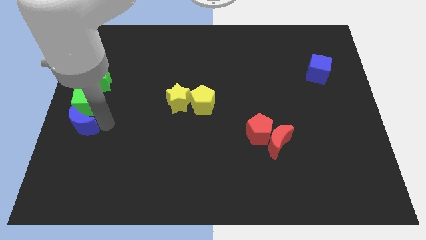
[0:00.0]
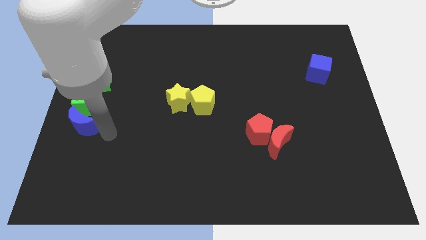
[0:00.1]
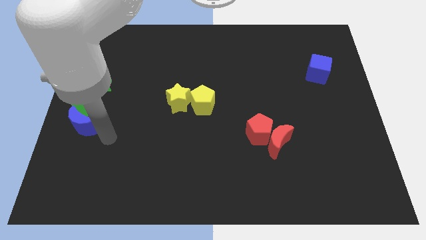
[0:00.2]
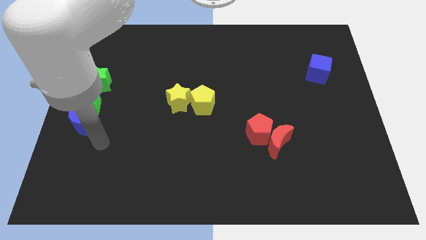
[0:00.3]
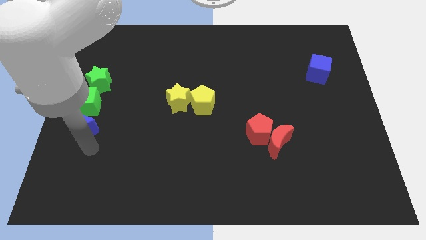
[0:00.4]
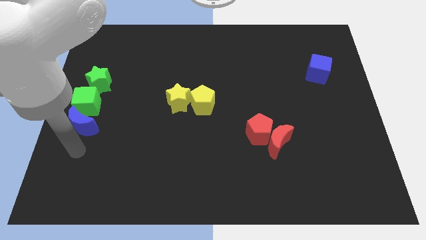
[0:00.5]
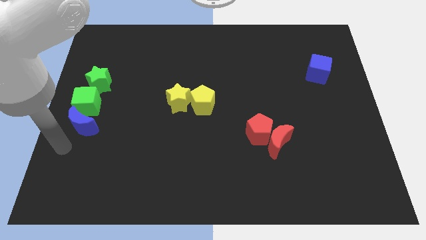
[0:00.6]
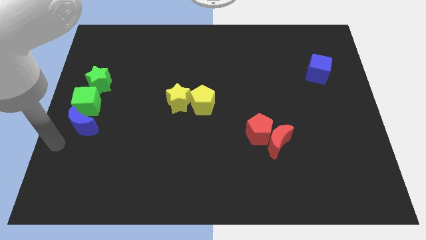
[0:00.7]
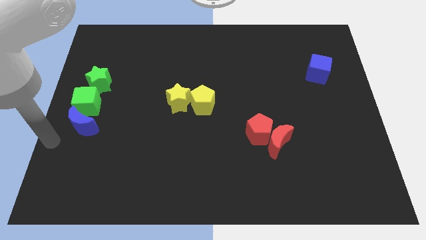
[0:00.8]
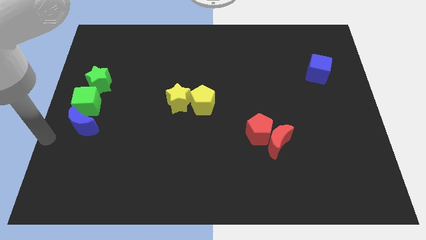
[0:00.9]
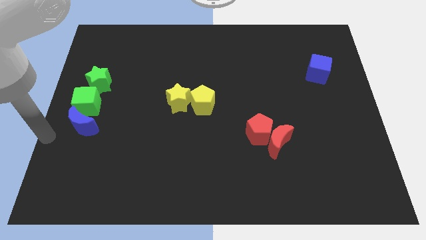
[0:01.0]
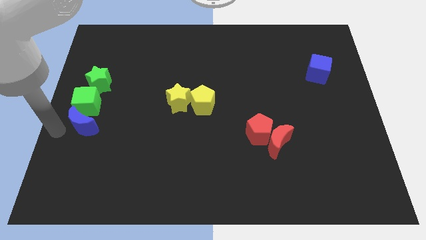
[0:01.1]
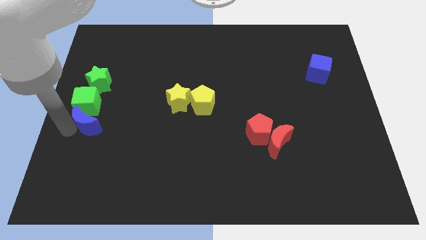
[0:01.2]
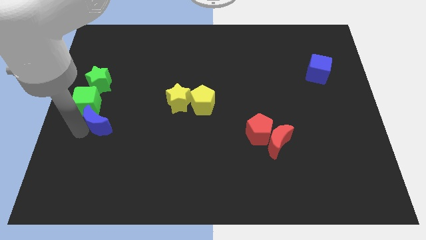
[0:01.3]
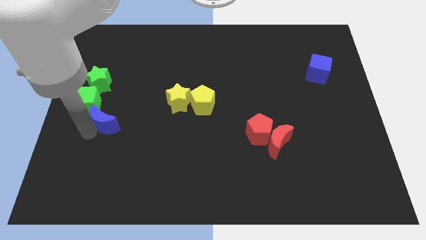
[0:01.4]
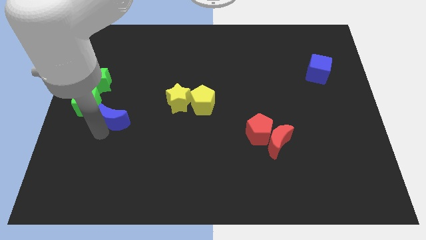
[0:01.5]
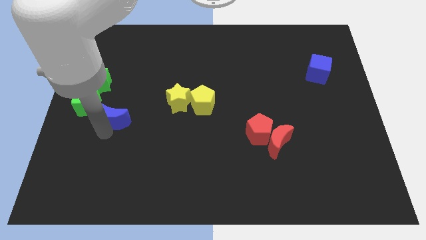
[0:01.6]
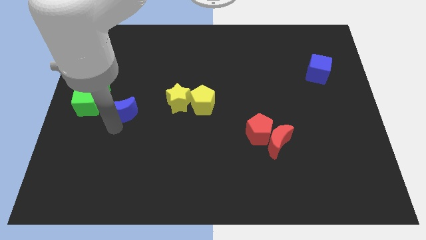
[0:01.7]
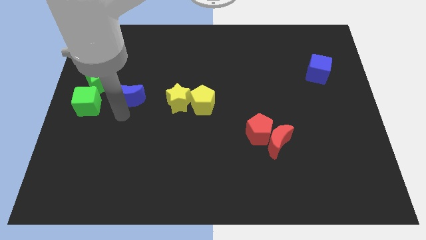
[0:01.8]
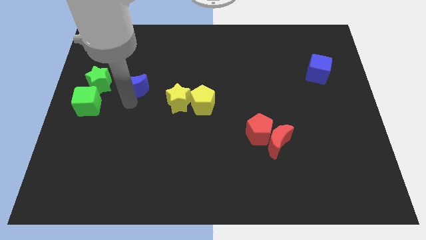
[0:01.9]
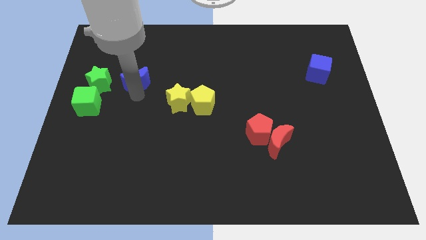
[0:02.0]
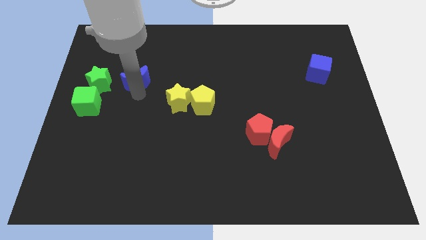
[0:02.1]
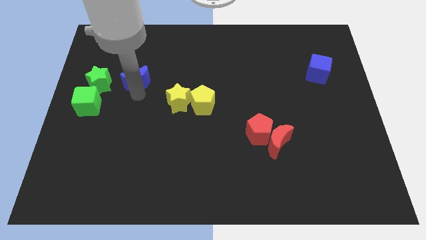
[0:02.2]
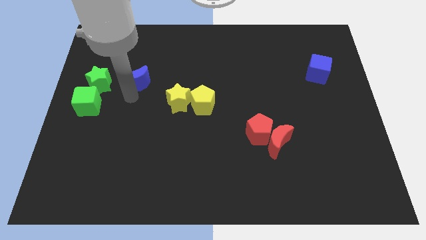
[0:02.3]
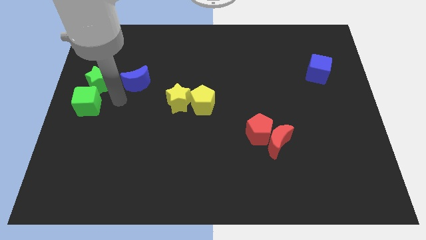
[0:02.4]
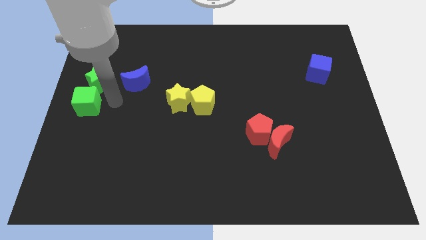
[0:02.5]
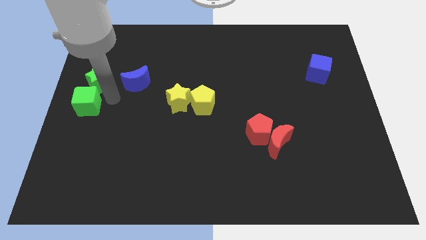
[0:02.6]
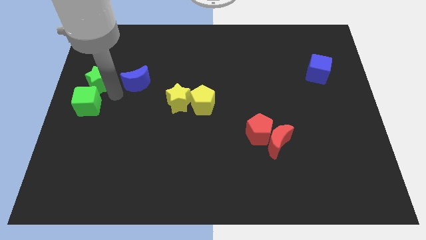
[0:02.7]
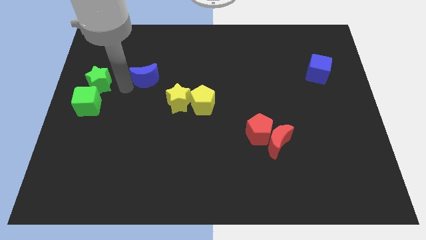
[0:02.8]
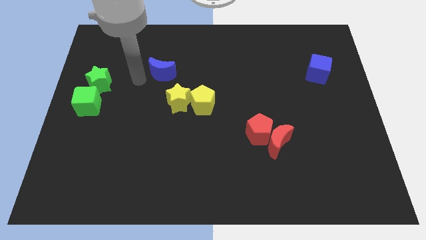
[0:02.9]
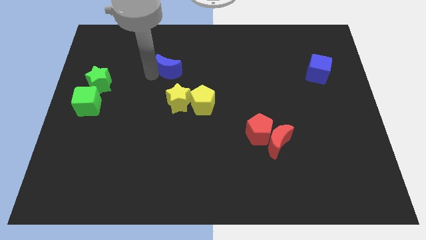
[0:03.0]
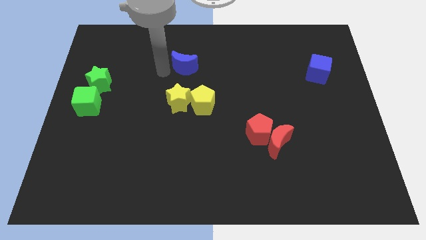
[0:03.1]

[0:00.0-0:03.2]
move the blue moon above the yellow star

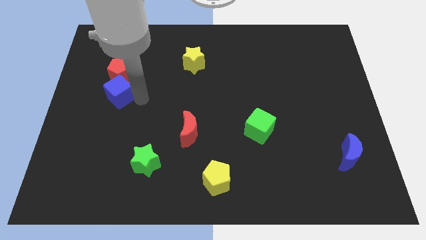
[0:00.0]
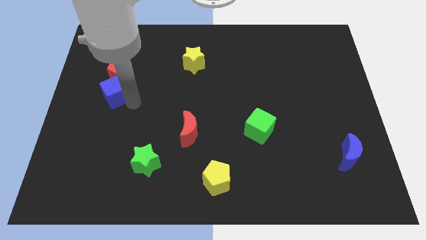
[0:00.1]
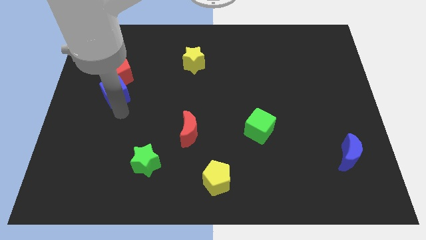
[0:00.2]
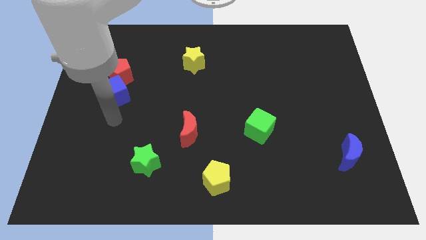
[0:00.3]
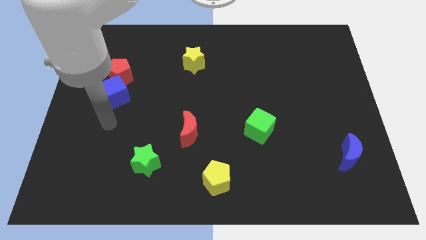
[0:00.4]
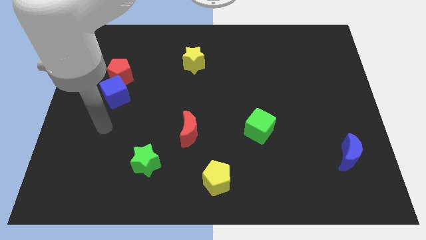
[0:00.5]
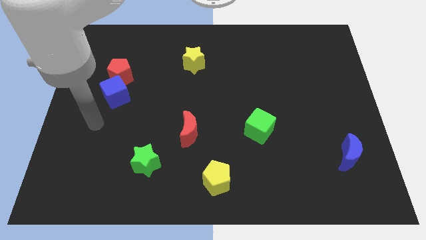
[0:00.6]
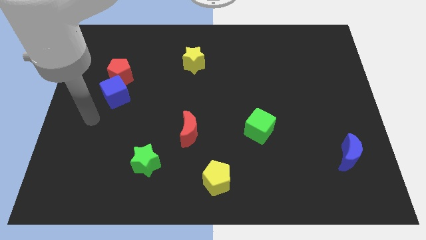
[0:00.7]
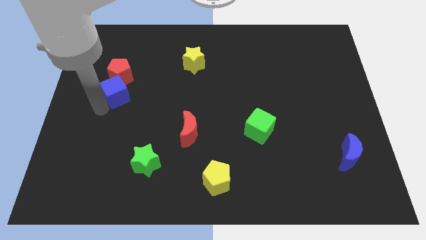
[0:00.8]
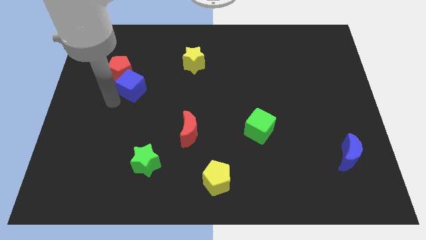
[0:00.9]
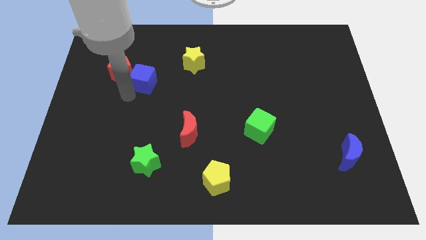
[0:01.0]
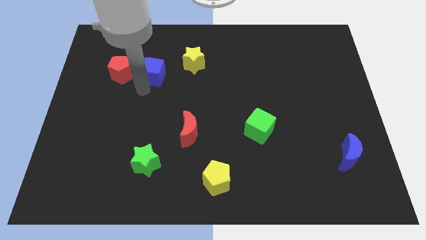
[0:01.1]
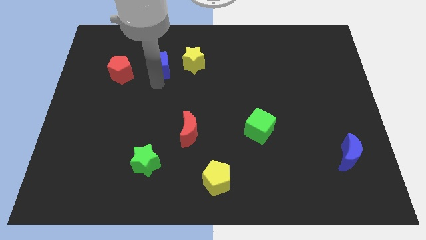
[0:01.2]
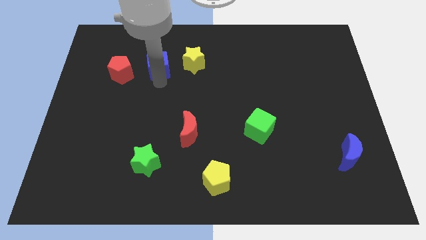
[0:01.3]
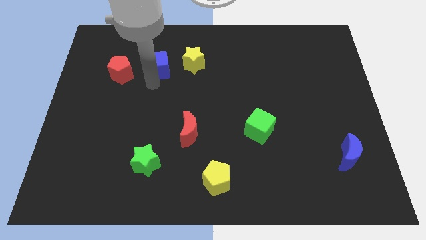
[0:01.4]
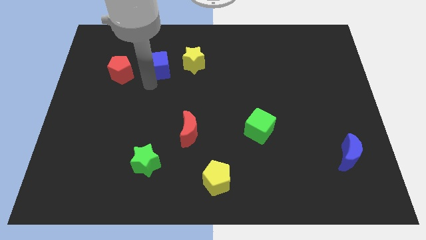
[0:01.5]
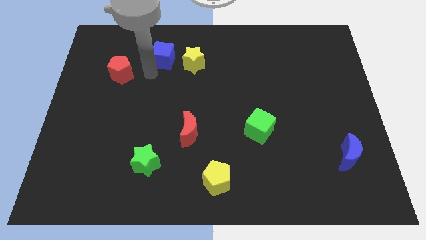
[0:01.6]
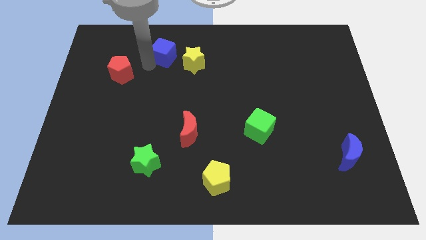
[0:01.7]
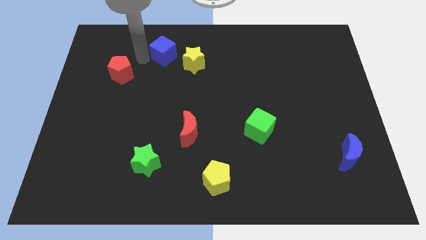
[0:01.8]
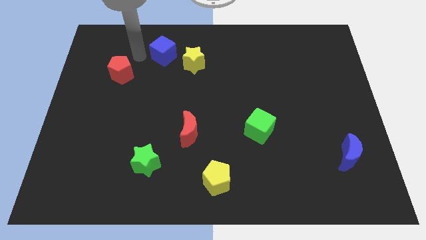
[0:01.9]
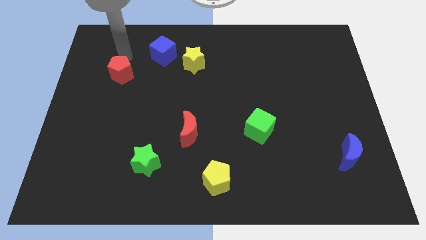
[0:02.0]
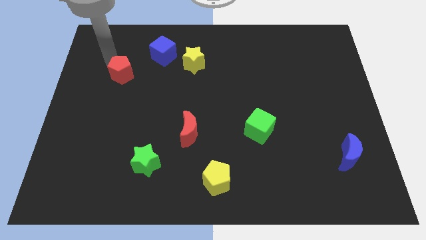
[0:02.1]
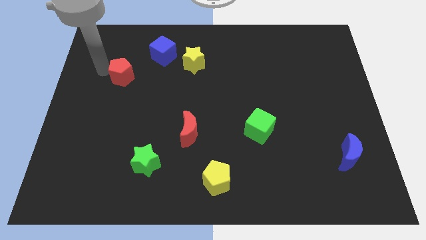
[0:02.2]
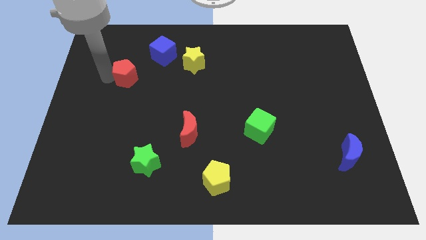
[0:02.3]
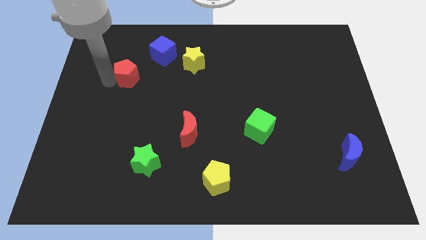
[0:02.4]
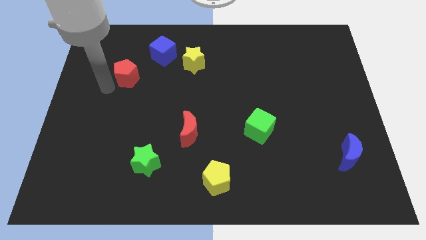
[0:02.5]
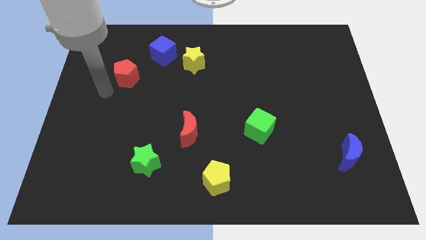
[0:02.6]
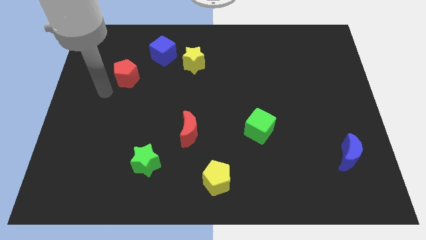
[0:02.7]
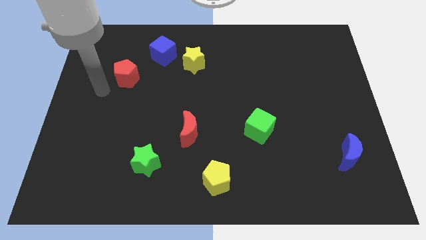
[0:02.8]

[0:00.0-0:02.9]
place the blue cube to right side of the red pentagon

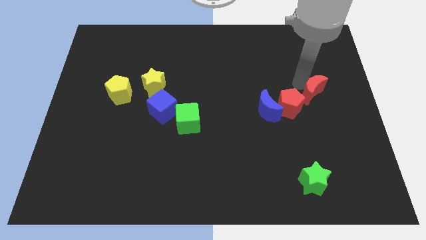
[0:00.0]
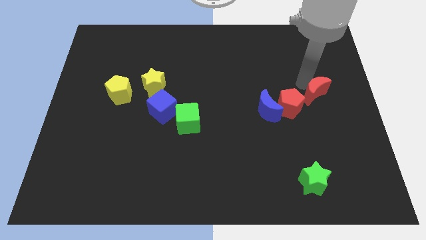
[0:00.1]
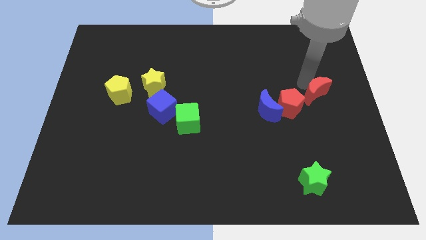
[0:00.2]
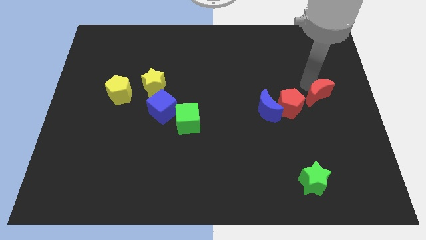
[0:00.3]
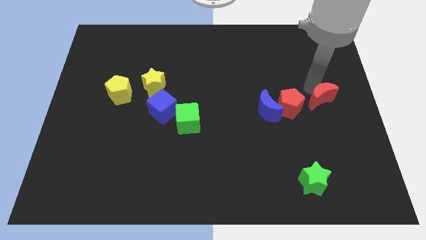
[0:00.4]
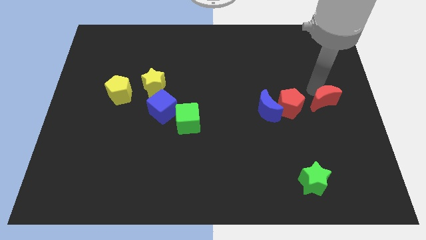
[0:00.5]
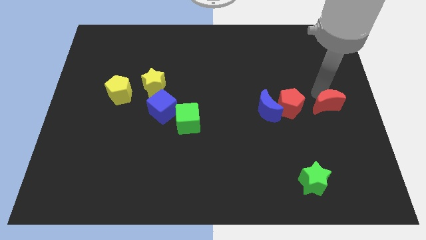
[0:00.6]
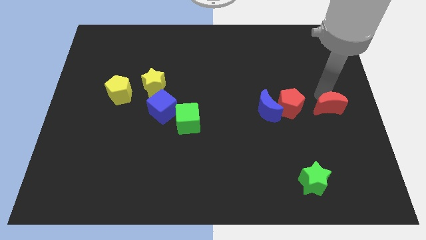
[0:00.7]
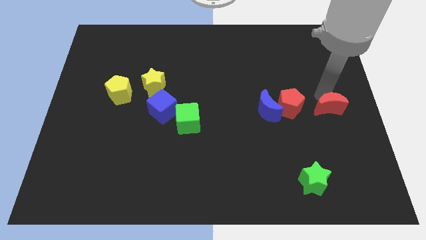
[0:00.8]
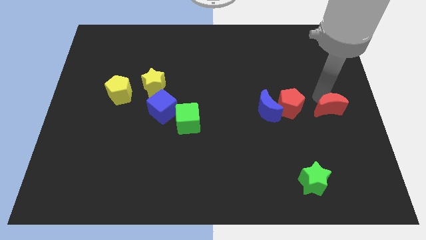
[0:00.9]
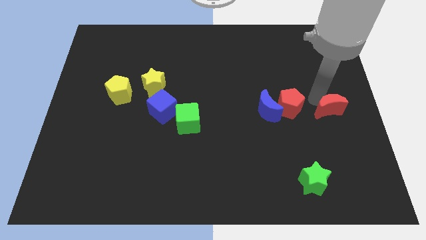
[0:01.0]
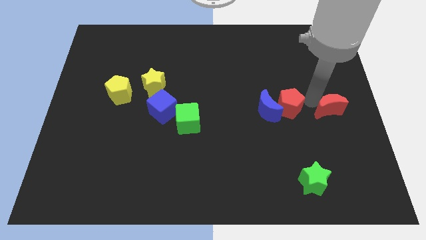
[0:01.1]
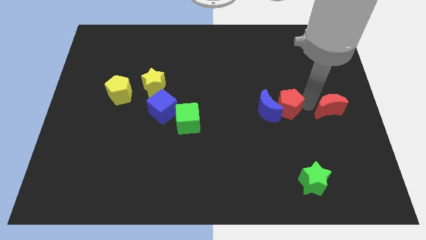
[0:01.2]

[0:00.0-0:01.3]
separate red moon from red pentagon

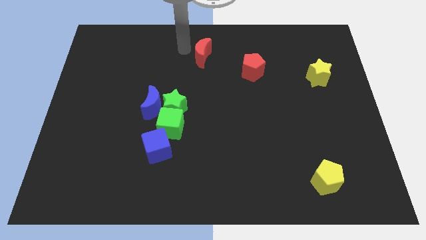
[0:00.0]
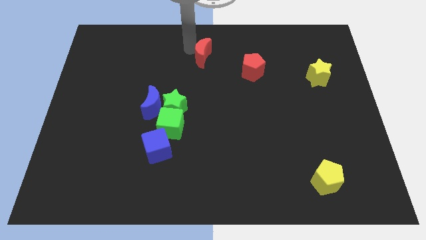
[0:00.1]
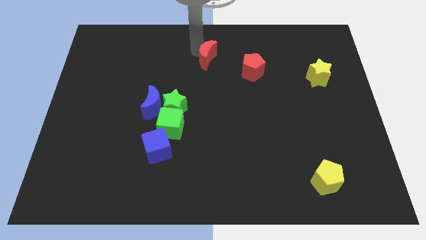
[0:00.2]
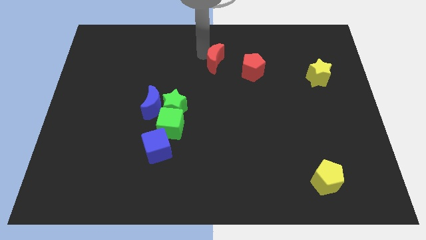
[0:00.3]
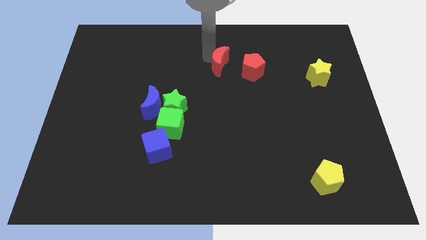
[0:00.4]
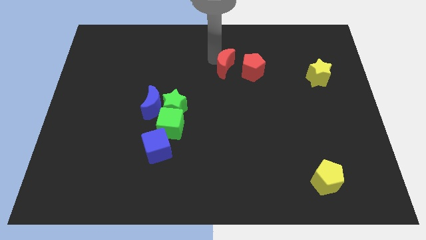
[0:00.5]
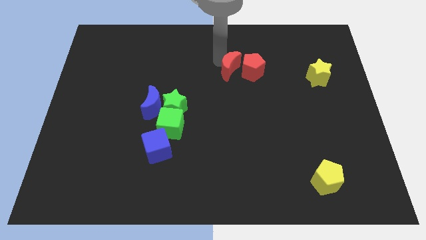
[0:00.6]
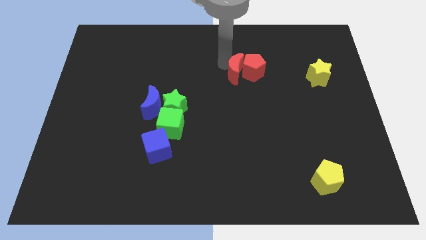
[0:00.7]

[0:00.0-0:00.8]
push the red moon to the left of red pentagon

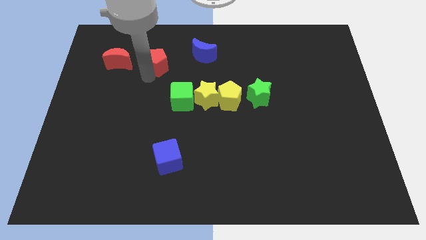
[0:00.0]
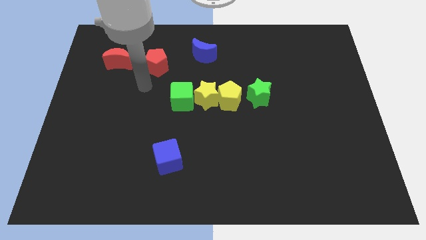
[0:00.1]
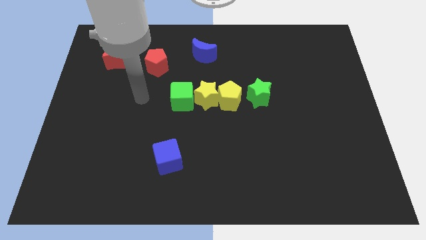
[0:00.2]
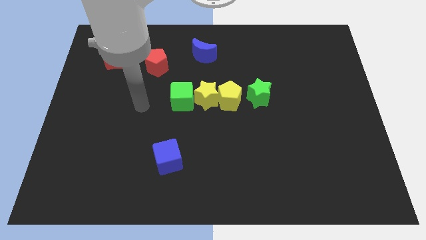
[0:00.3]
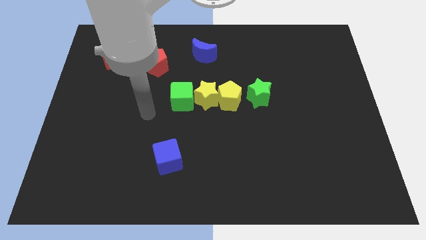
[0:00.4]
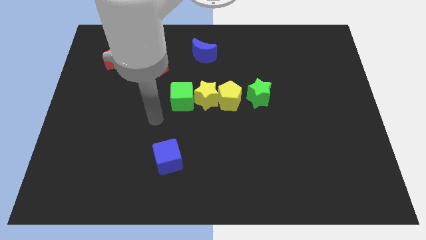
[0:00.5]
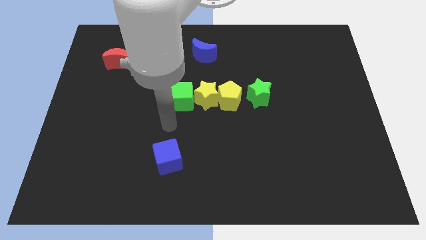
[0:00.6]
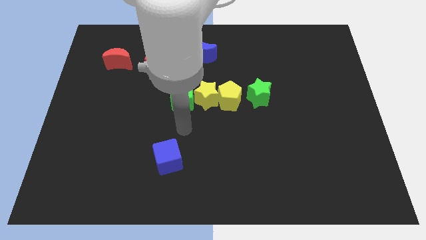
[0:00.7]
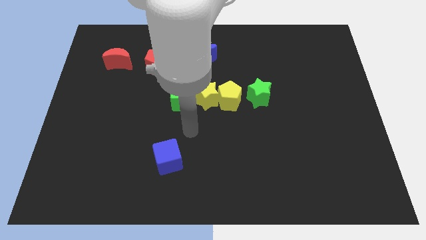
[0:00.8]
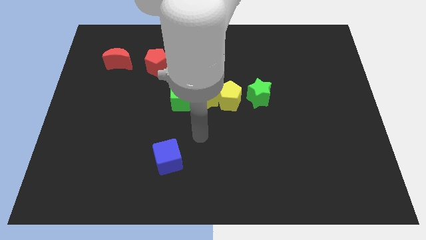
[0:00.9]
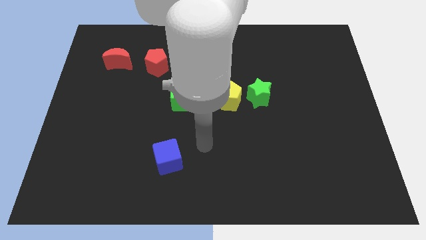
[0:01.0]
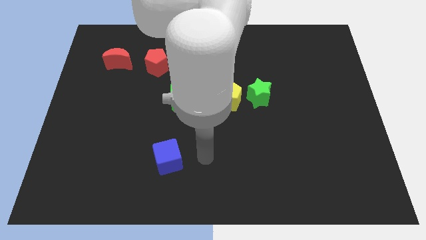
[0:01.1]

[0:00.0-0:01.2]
go away from the red pentagon
